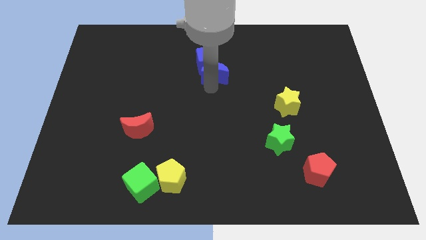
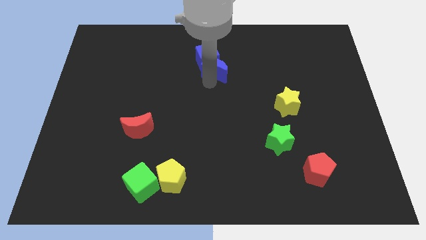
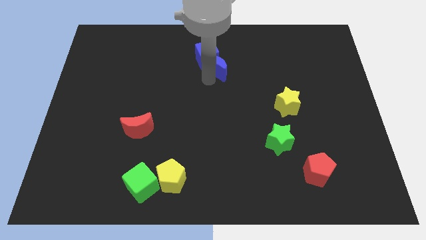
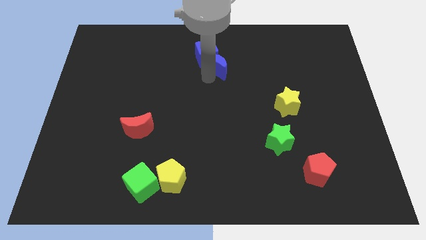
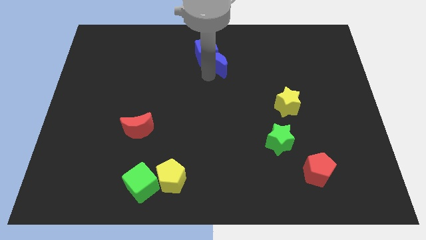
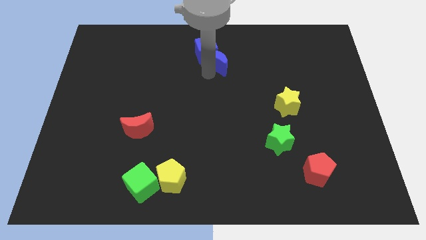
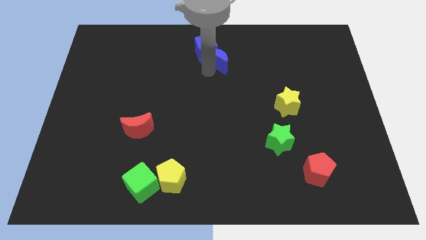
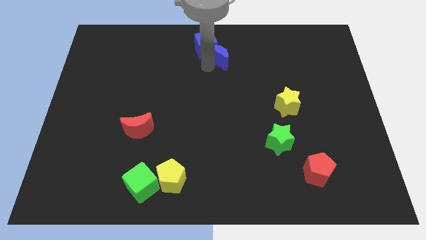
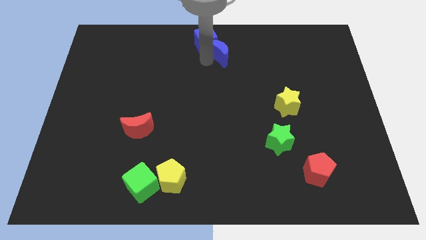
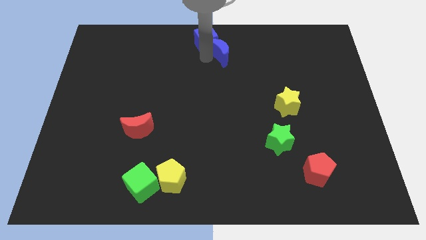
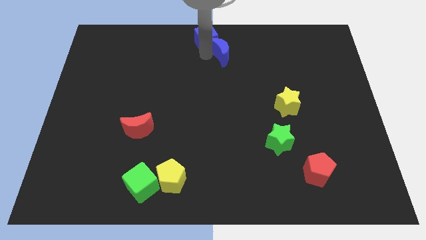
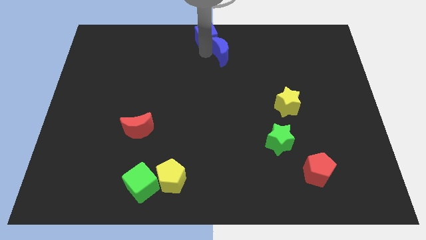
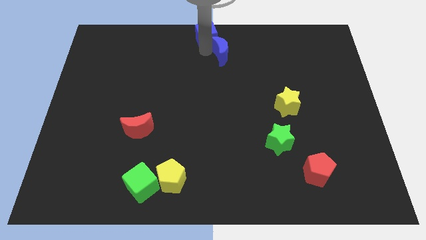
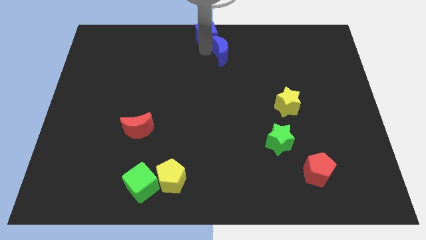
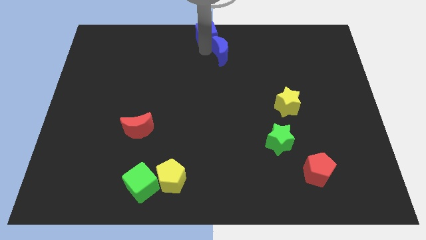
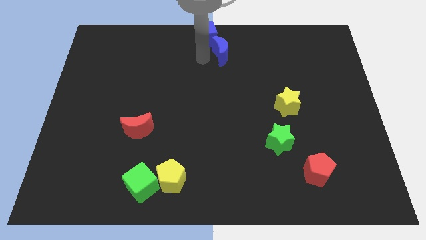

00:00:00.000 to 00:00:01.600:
move the blocks to the top center of the board

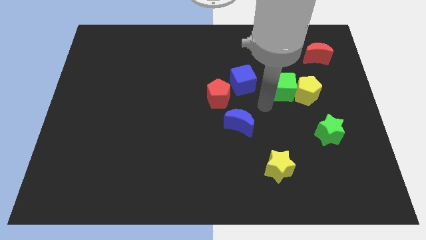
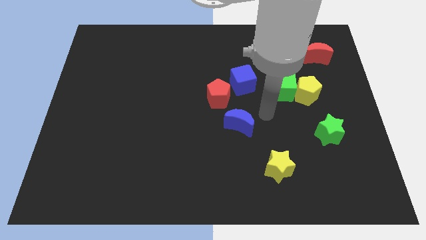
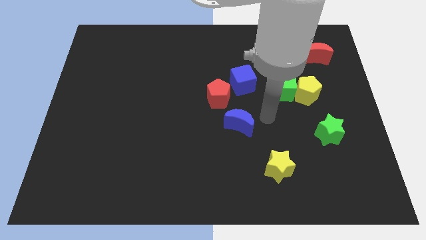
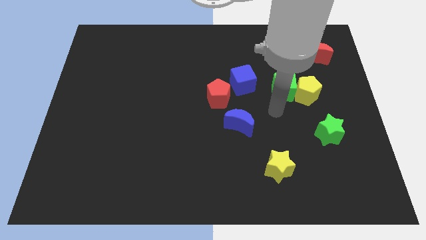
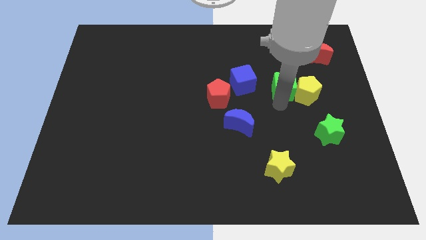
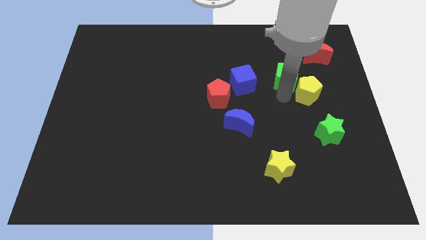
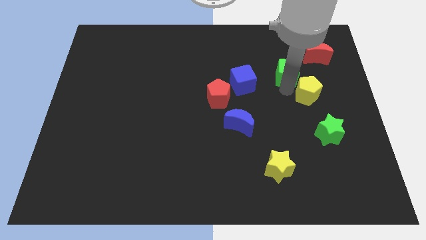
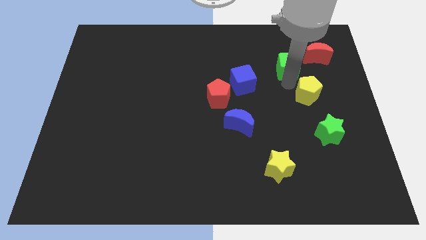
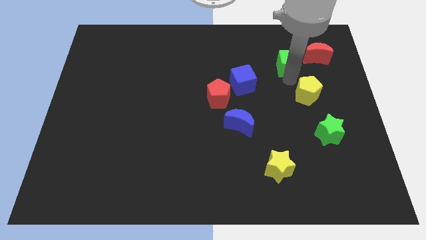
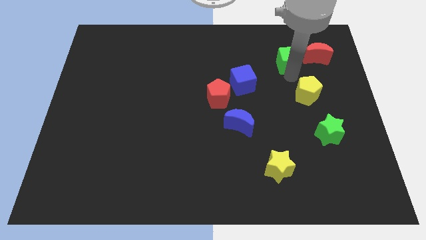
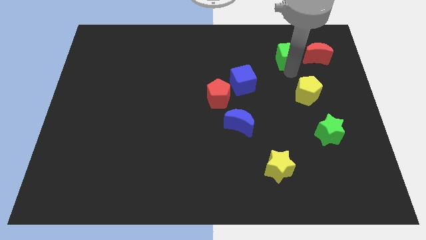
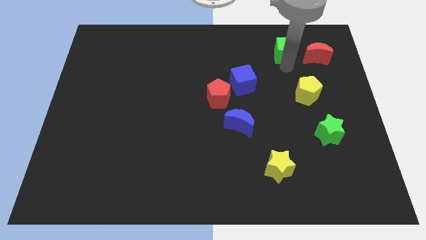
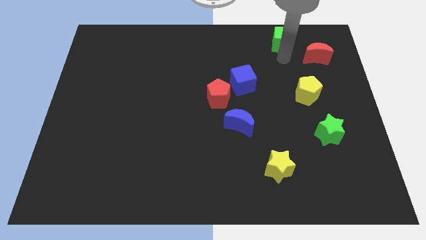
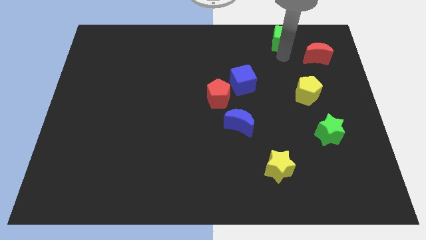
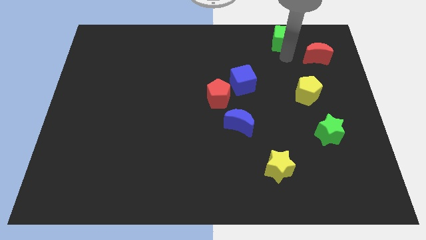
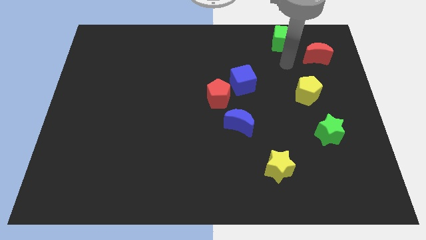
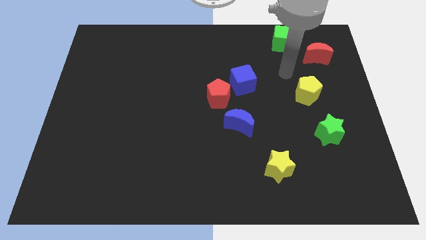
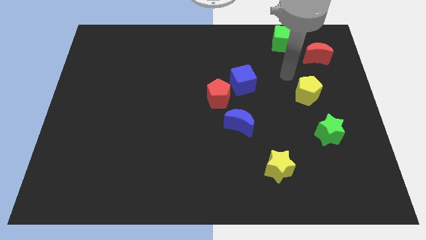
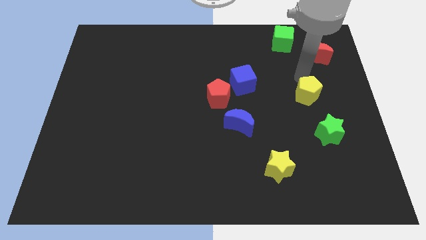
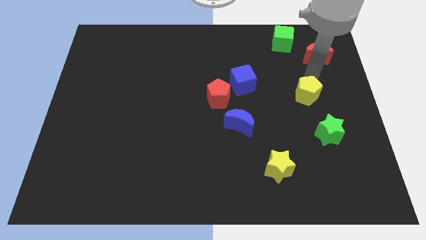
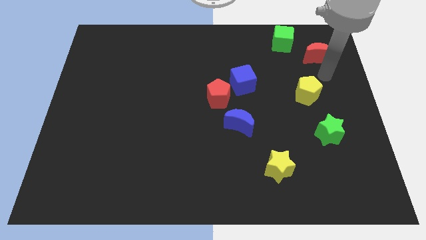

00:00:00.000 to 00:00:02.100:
separate green cube from yellow pentagon

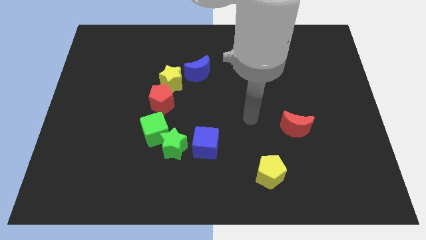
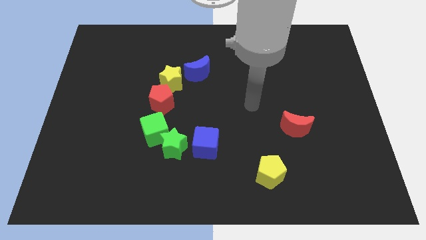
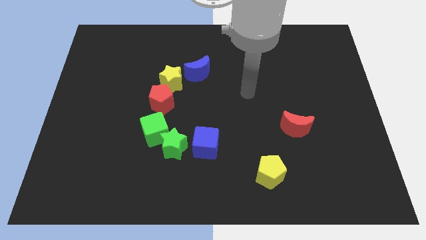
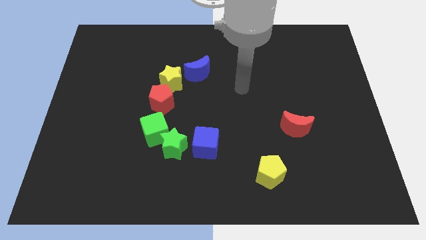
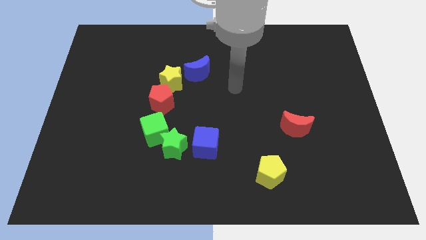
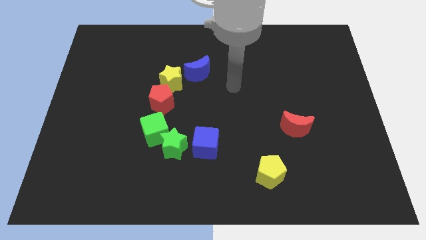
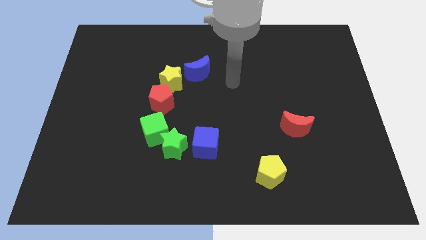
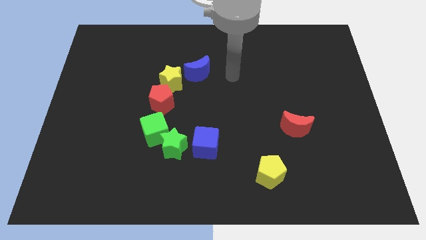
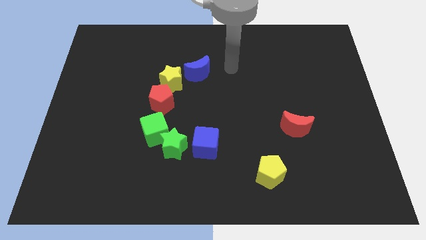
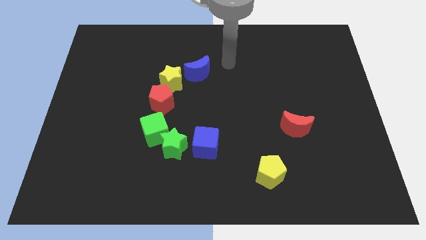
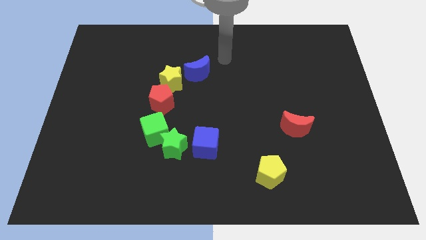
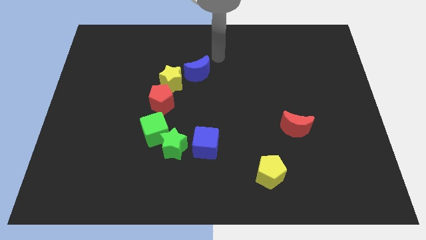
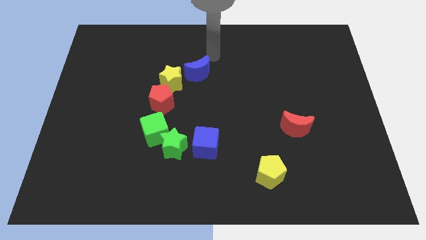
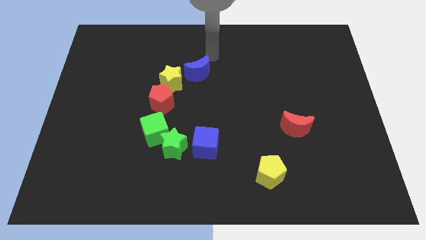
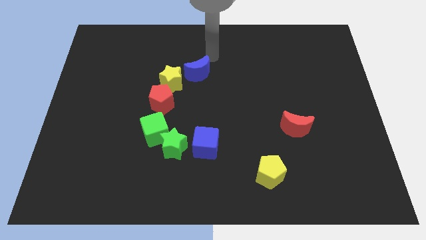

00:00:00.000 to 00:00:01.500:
place your arm at the top left of the blue crescent

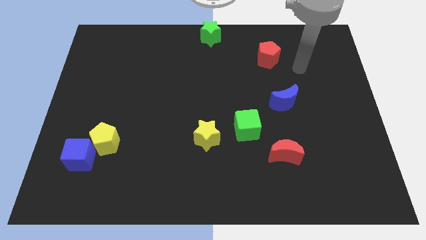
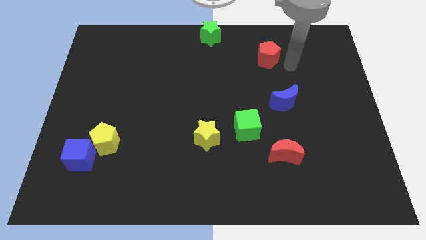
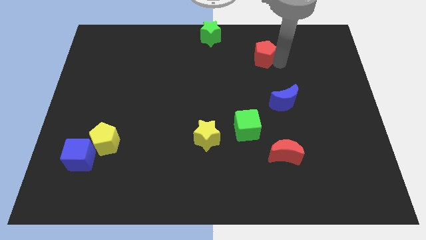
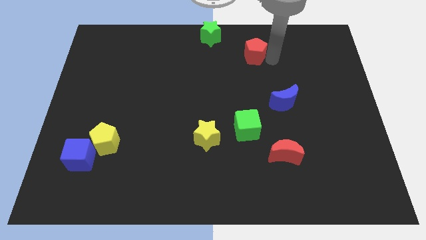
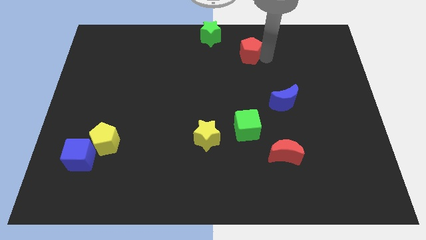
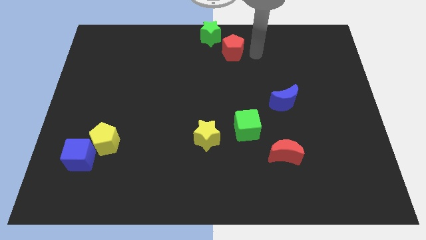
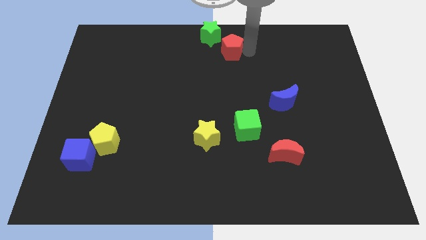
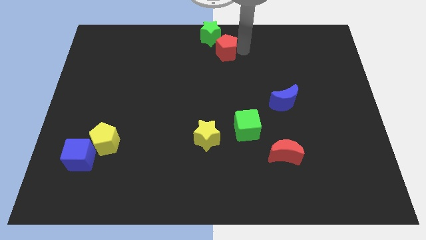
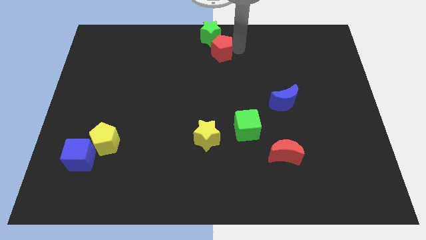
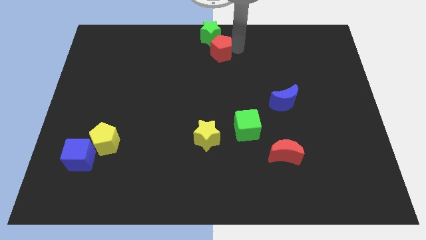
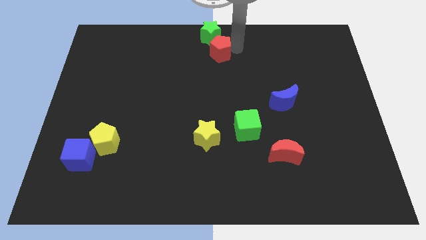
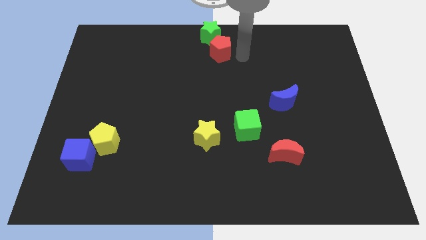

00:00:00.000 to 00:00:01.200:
move the red pentagon close to the bottom right of the green star

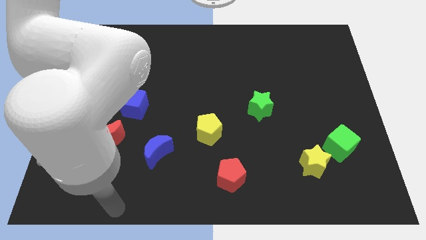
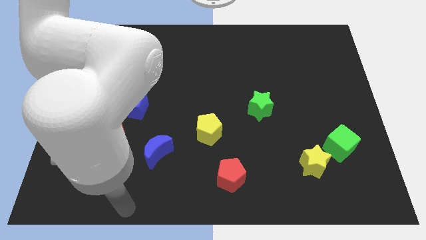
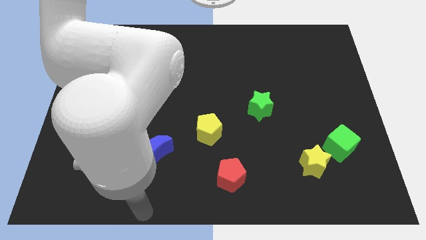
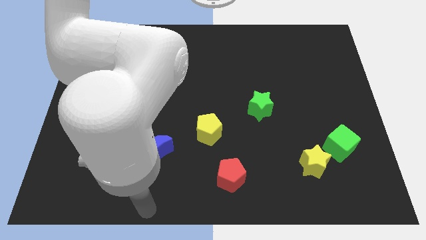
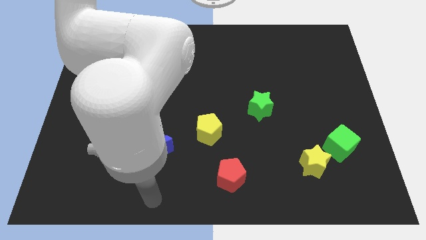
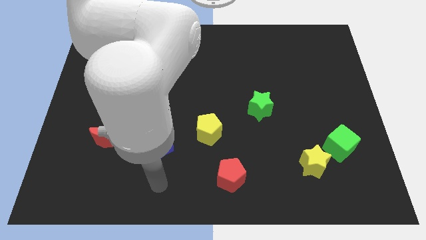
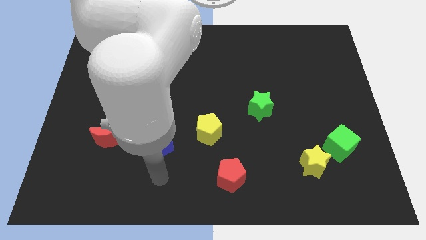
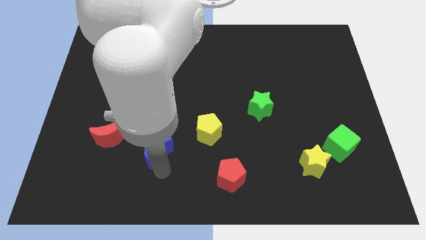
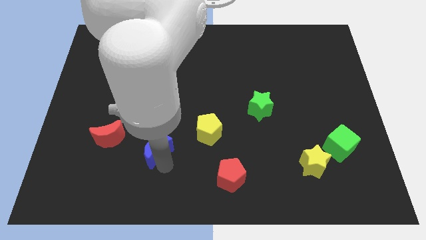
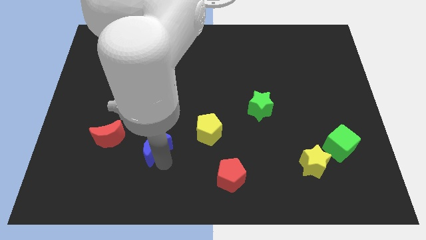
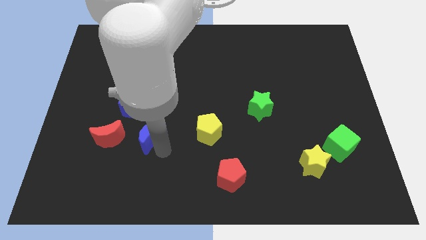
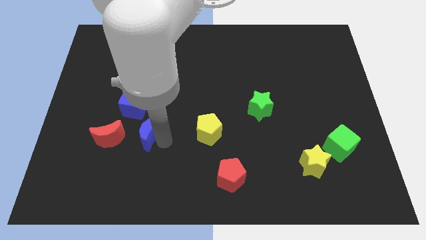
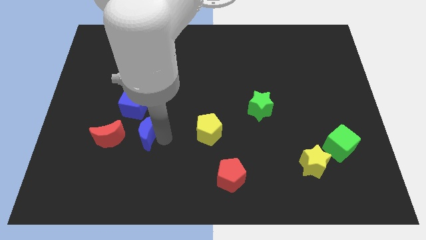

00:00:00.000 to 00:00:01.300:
place blue moon to the right of red moon

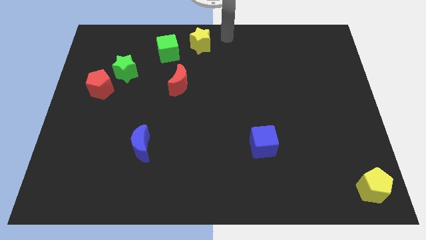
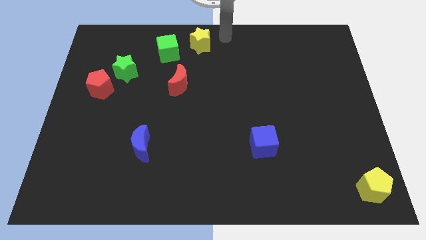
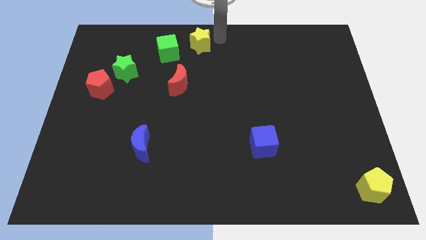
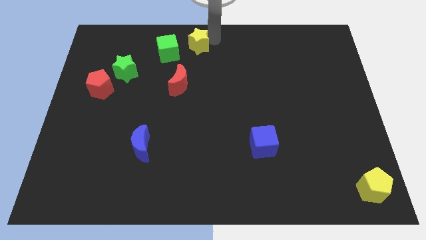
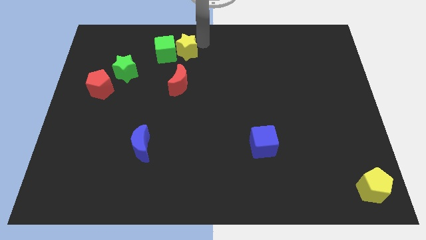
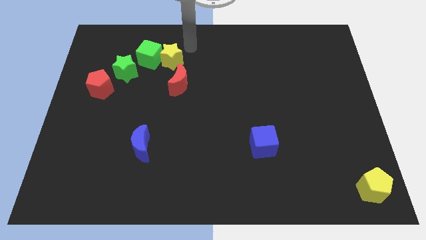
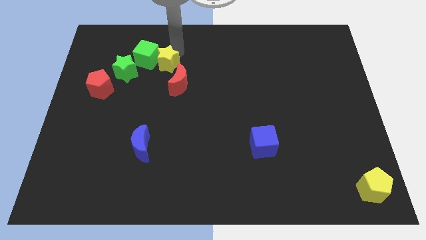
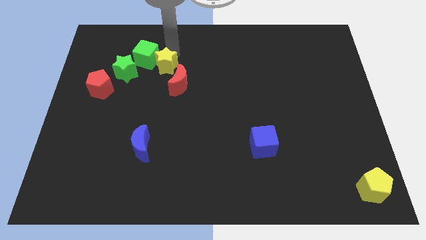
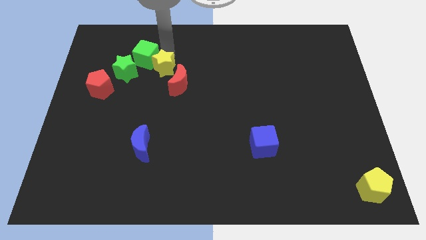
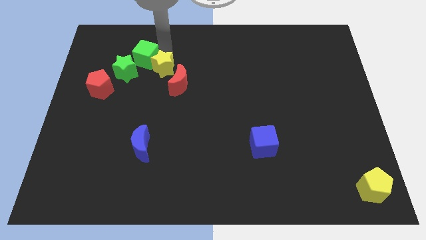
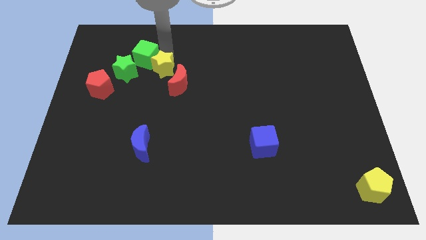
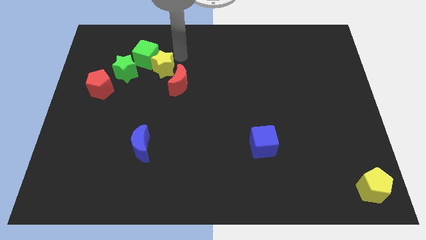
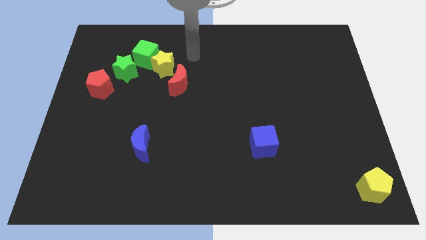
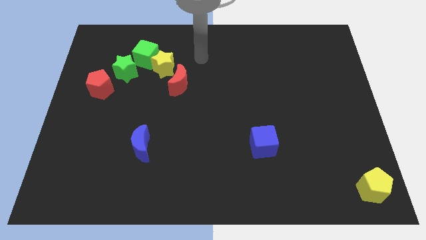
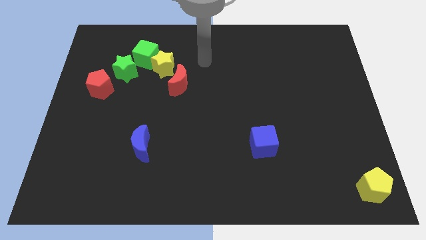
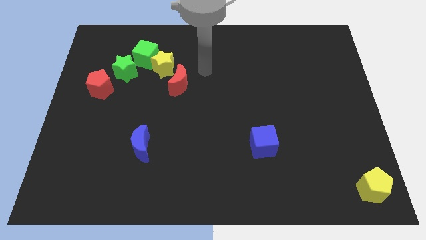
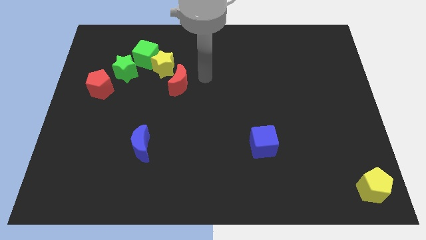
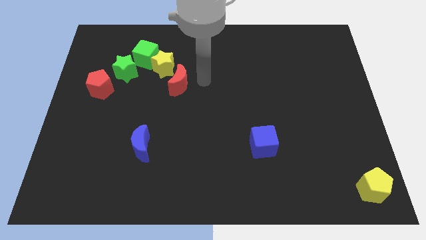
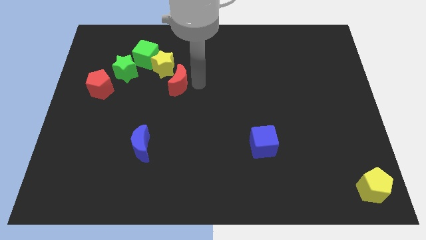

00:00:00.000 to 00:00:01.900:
push the yellow star into the green cube
